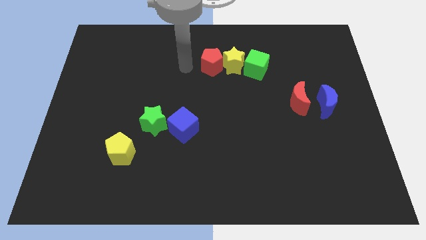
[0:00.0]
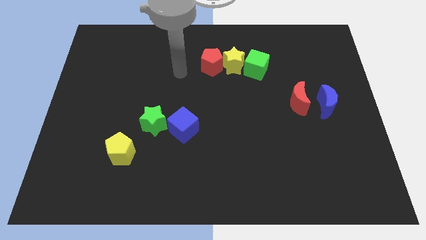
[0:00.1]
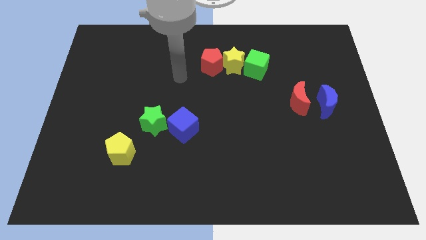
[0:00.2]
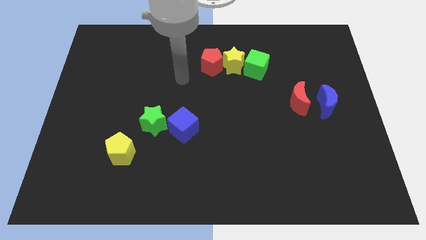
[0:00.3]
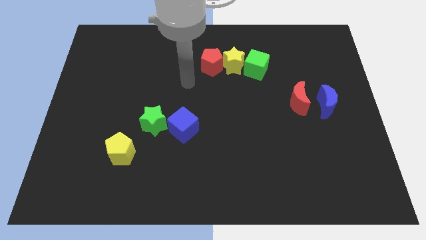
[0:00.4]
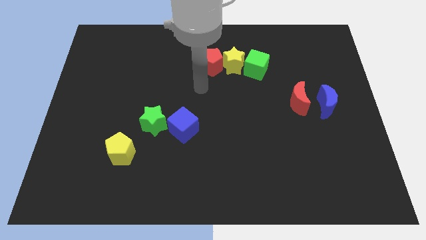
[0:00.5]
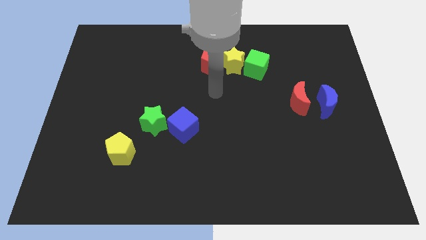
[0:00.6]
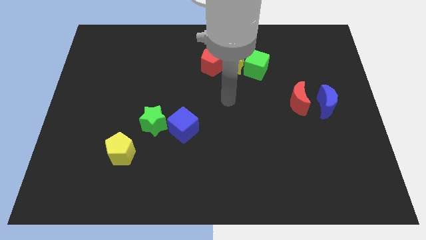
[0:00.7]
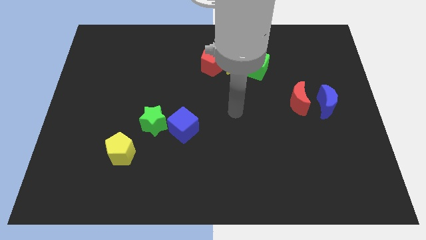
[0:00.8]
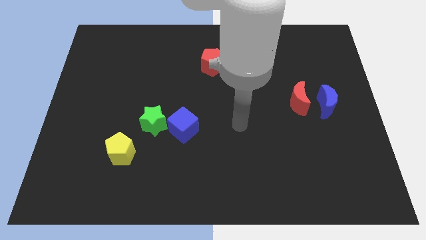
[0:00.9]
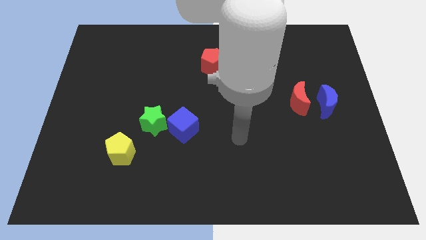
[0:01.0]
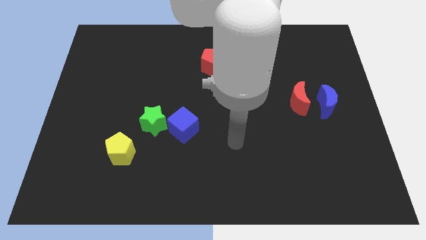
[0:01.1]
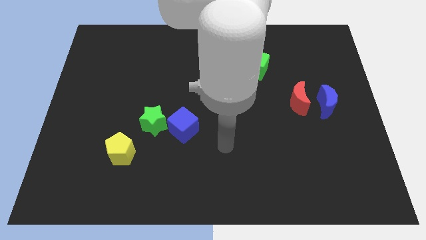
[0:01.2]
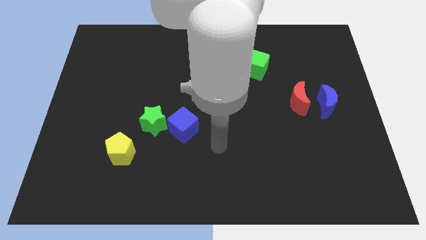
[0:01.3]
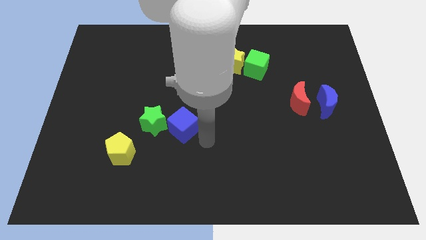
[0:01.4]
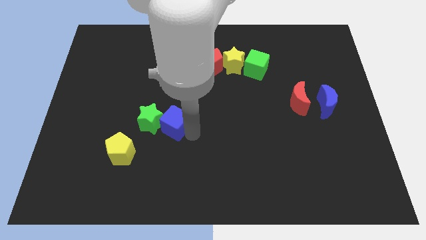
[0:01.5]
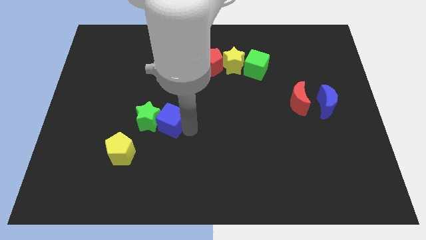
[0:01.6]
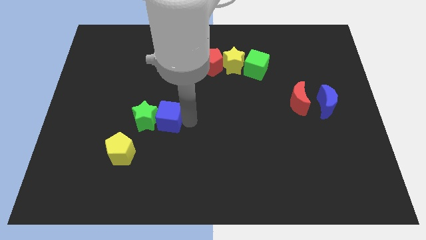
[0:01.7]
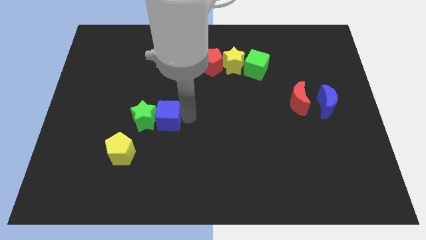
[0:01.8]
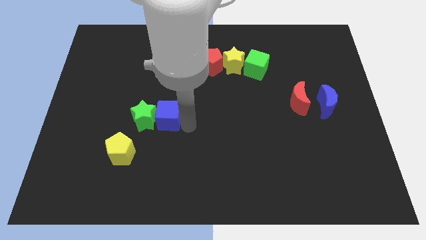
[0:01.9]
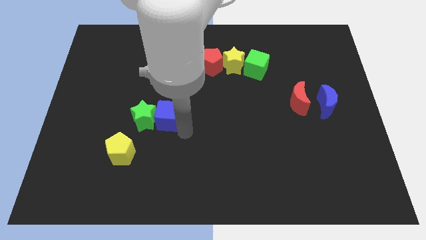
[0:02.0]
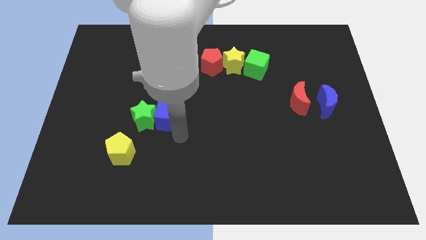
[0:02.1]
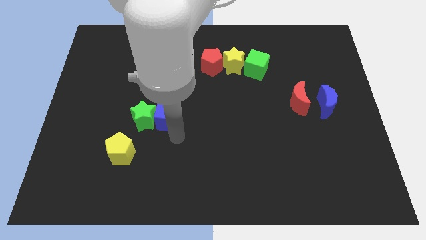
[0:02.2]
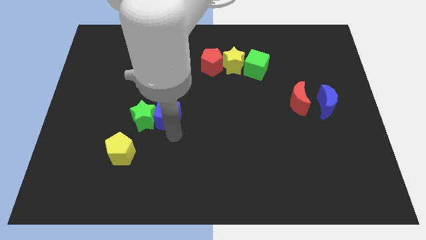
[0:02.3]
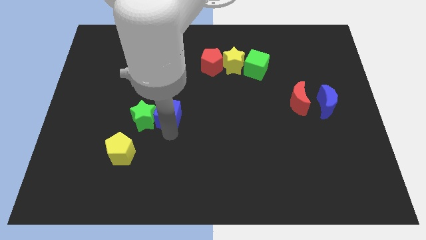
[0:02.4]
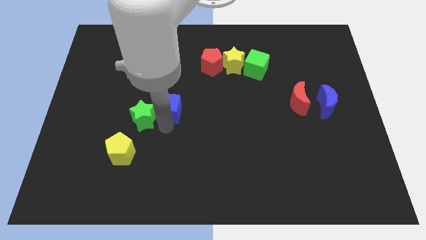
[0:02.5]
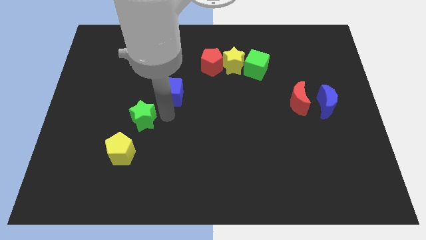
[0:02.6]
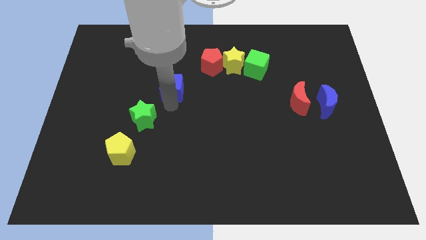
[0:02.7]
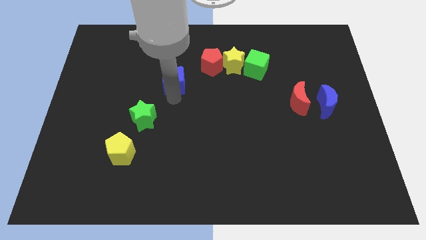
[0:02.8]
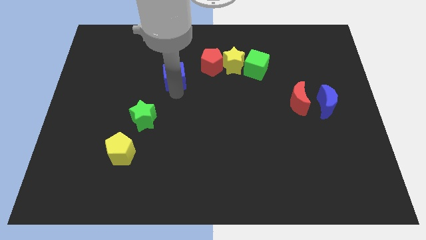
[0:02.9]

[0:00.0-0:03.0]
separate green star and blue cube

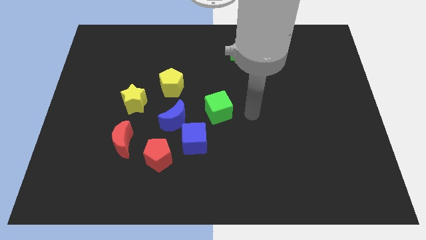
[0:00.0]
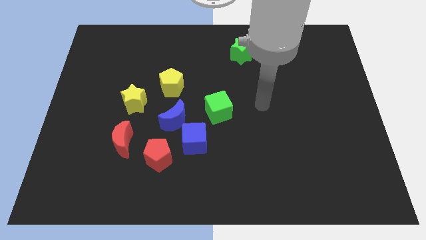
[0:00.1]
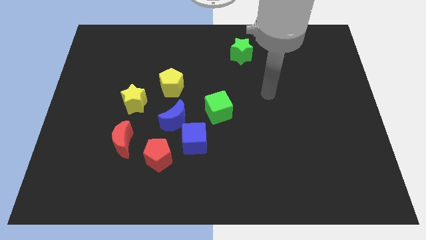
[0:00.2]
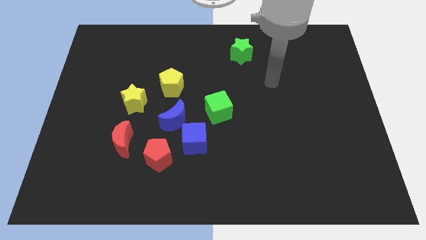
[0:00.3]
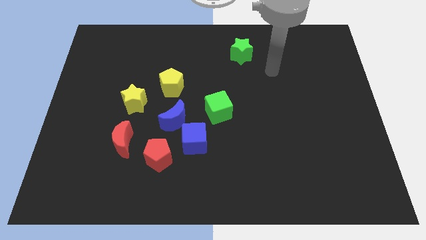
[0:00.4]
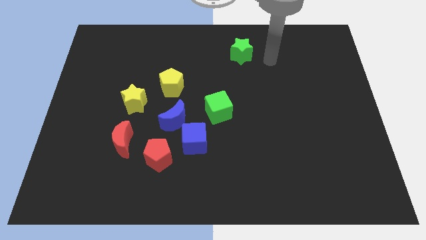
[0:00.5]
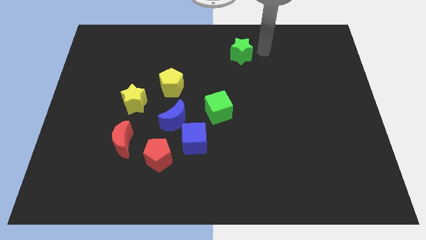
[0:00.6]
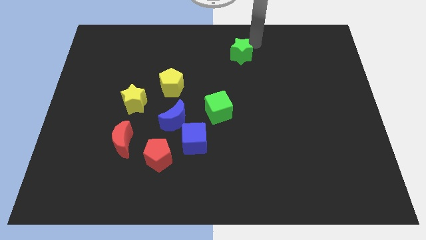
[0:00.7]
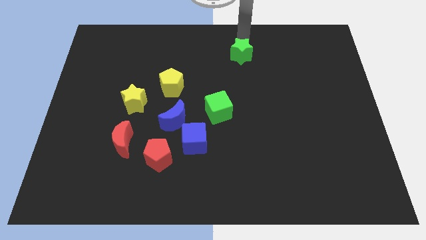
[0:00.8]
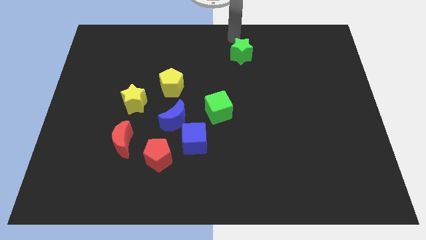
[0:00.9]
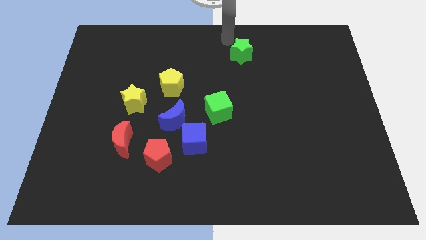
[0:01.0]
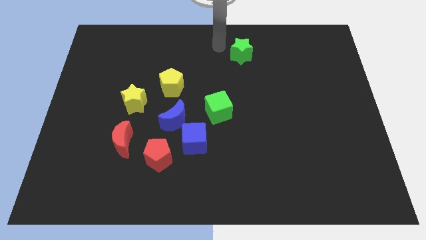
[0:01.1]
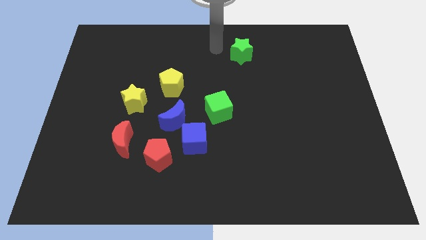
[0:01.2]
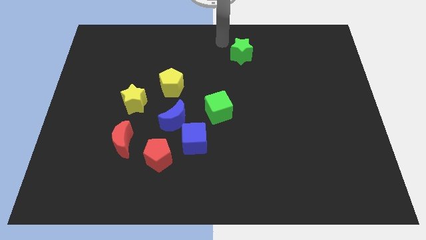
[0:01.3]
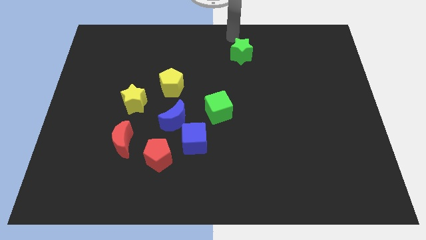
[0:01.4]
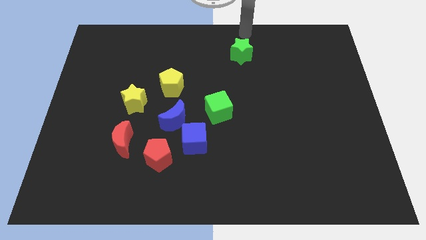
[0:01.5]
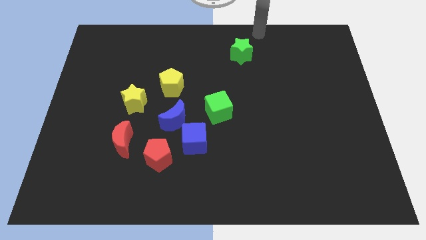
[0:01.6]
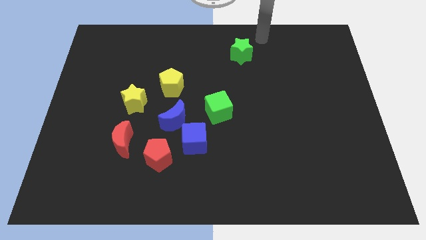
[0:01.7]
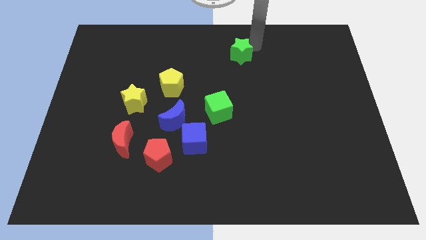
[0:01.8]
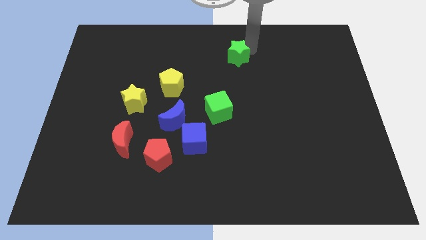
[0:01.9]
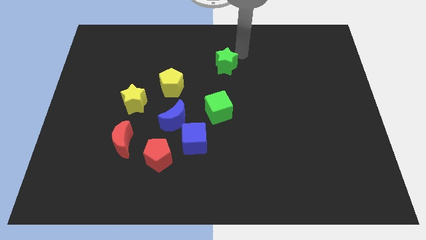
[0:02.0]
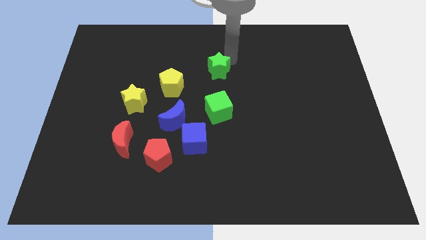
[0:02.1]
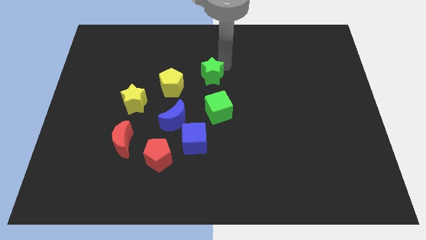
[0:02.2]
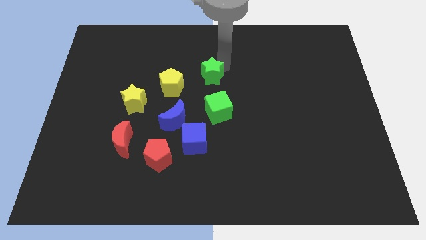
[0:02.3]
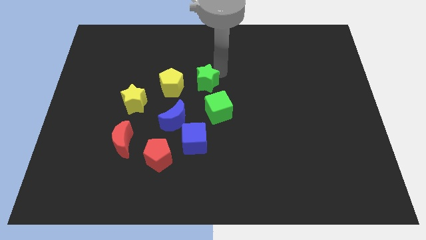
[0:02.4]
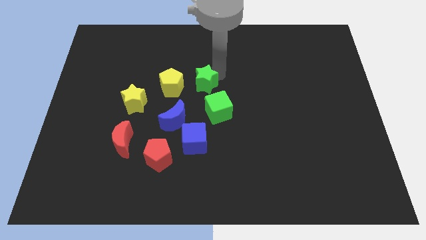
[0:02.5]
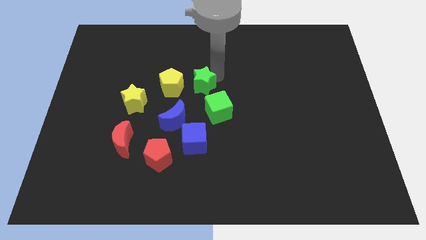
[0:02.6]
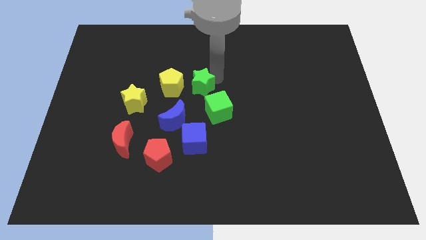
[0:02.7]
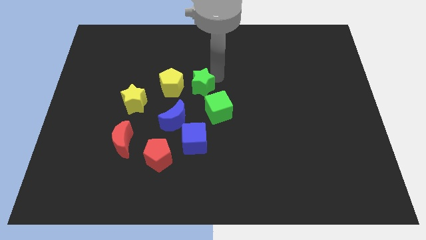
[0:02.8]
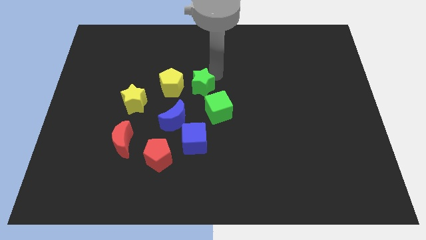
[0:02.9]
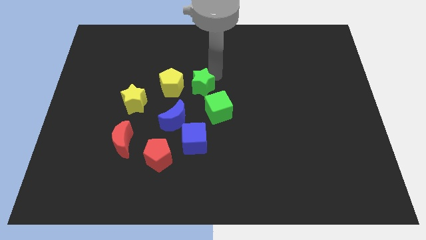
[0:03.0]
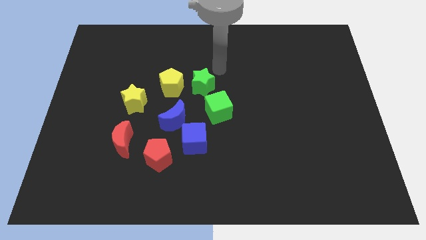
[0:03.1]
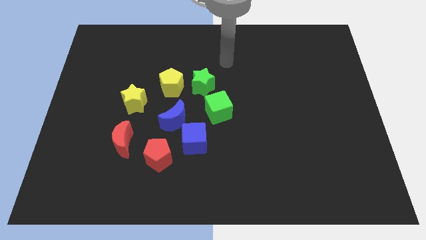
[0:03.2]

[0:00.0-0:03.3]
place green star to the right of yellow pentagon

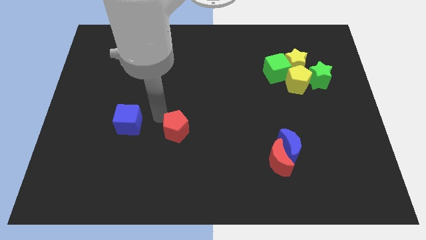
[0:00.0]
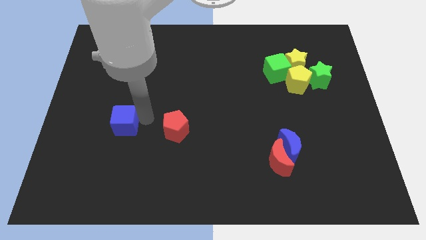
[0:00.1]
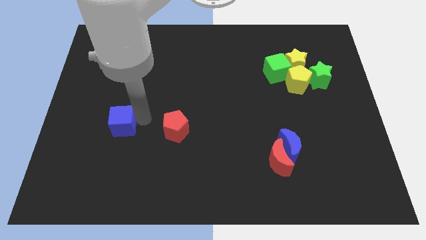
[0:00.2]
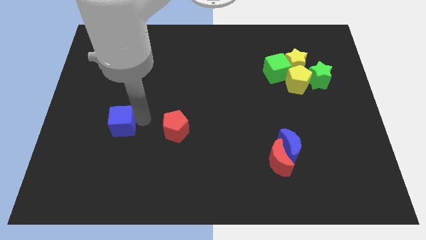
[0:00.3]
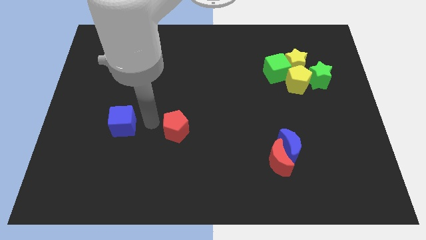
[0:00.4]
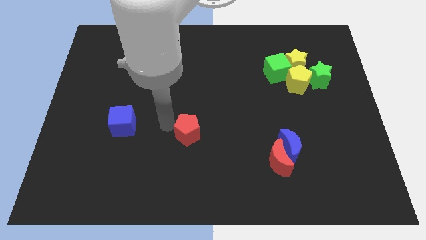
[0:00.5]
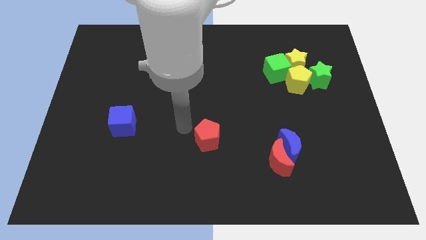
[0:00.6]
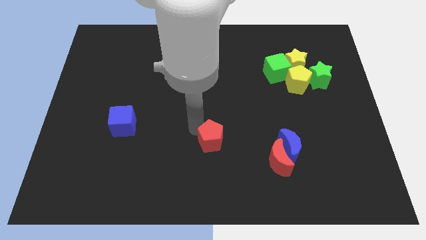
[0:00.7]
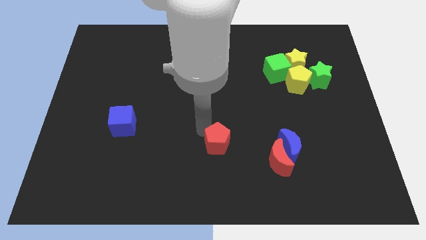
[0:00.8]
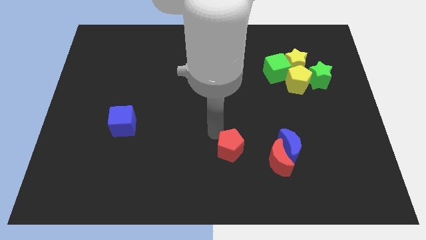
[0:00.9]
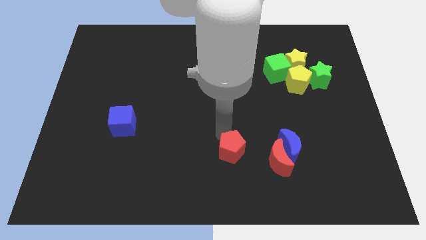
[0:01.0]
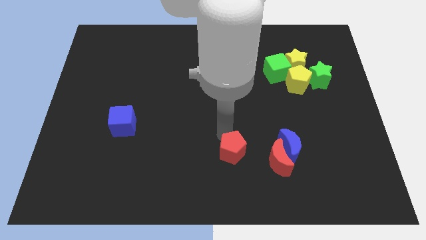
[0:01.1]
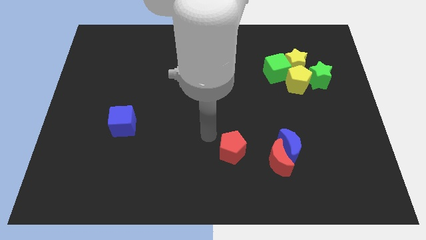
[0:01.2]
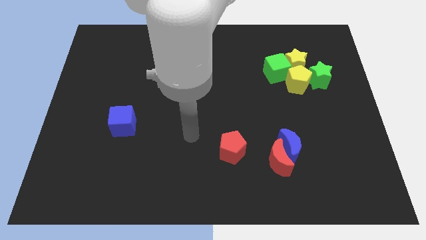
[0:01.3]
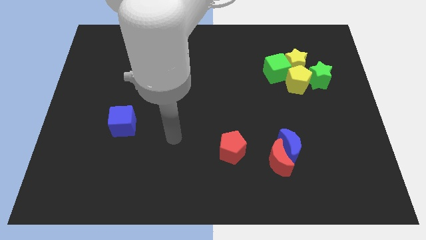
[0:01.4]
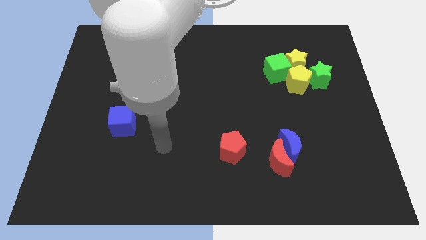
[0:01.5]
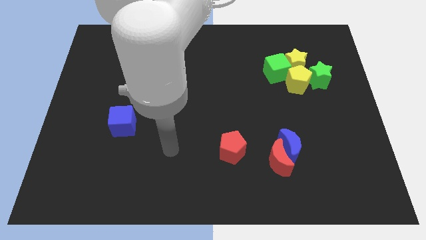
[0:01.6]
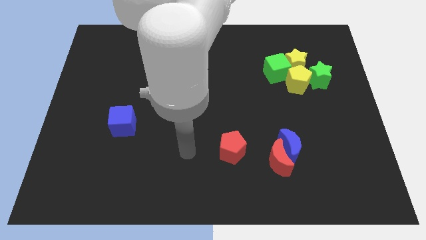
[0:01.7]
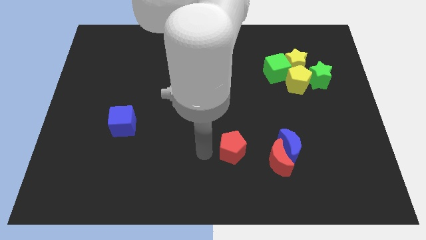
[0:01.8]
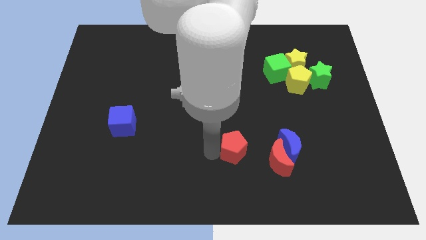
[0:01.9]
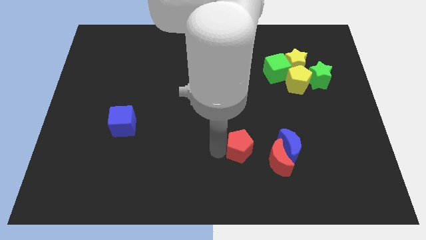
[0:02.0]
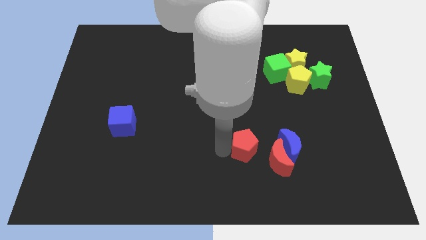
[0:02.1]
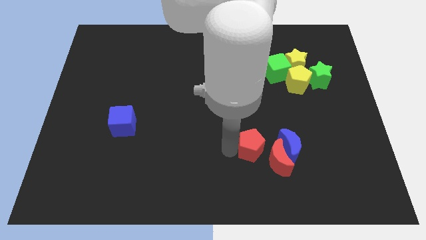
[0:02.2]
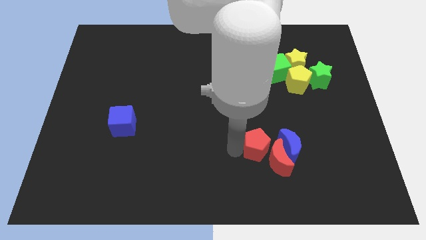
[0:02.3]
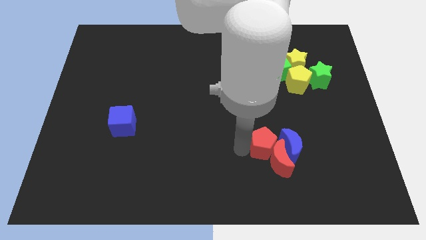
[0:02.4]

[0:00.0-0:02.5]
separate the red pentagon towards the red moon on top

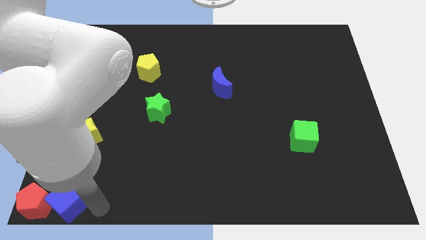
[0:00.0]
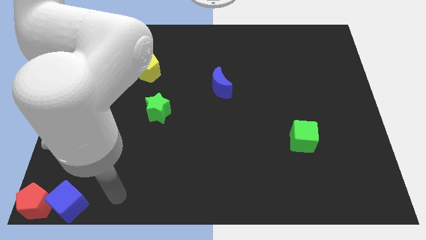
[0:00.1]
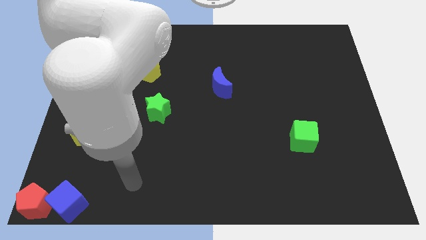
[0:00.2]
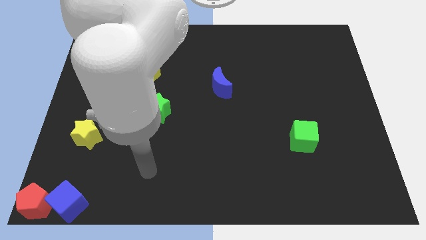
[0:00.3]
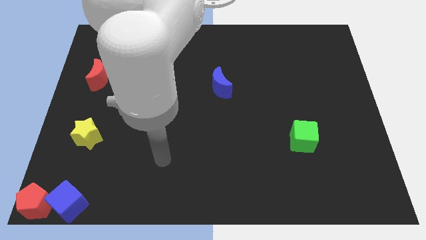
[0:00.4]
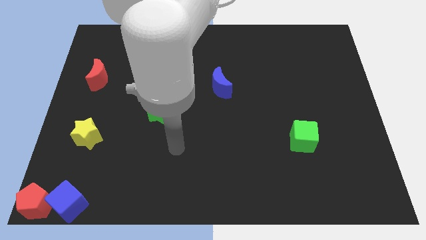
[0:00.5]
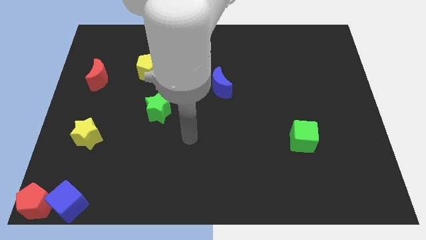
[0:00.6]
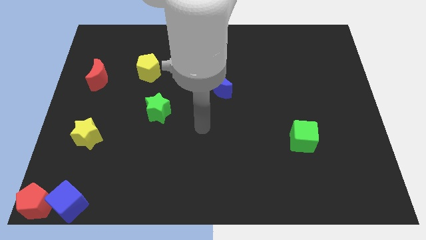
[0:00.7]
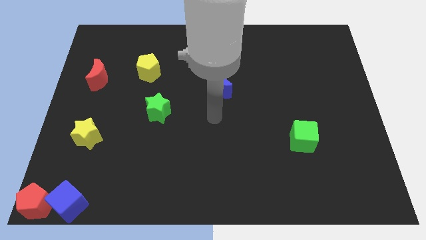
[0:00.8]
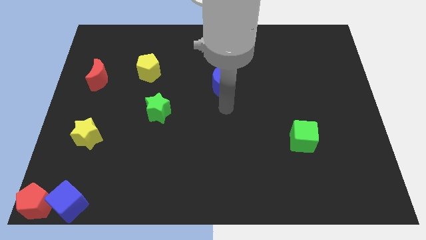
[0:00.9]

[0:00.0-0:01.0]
go away from the blue cube
